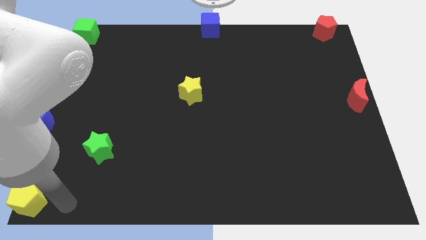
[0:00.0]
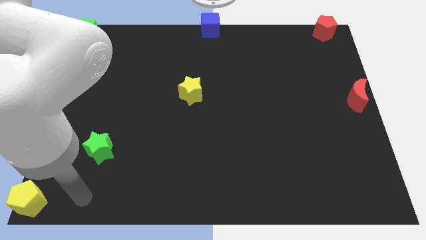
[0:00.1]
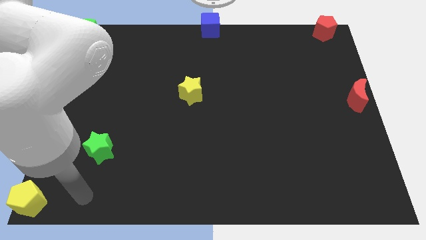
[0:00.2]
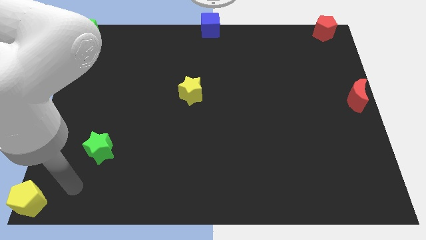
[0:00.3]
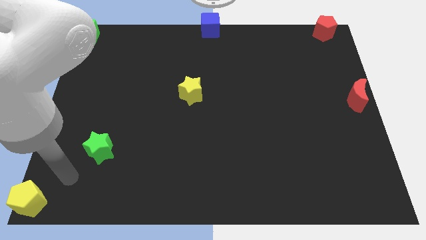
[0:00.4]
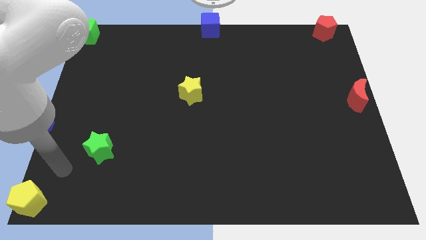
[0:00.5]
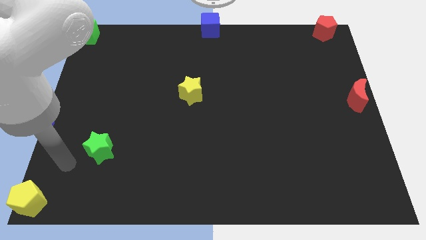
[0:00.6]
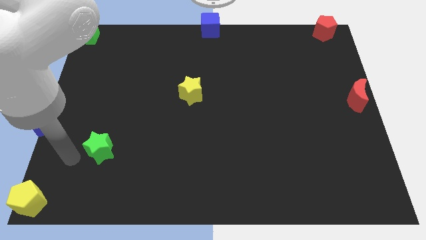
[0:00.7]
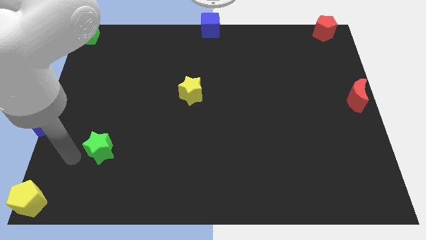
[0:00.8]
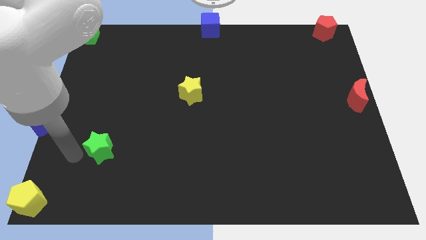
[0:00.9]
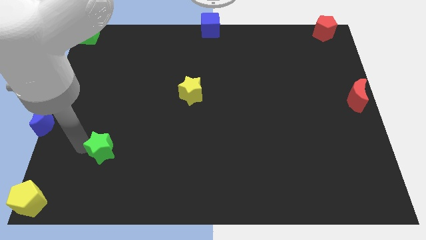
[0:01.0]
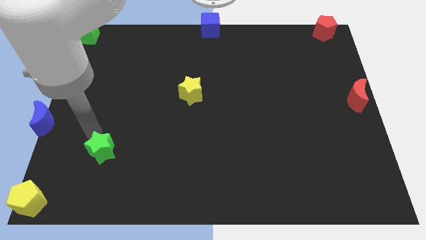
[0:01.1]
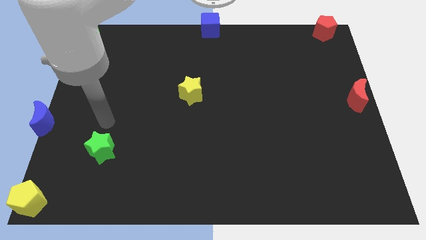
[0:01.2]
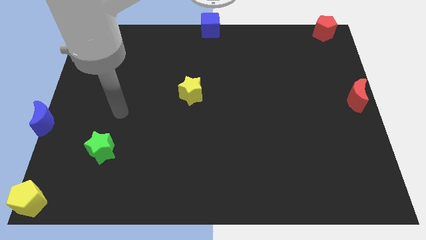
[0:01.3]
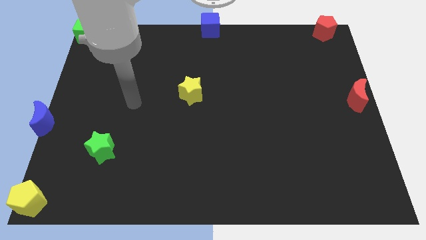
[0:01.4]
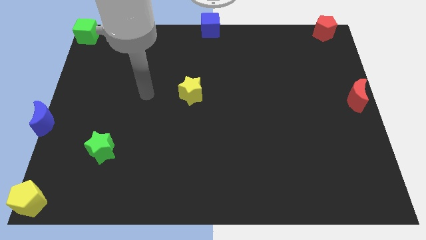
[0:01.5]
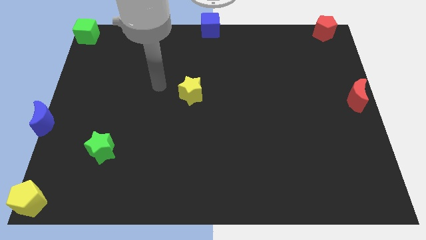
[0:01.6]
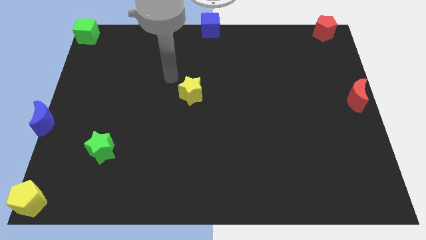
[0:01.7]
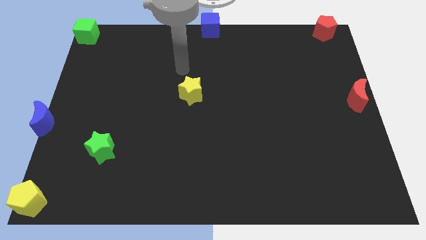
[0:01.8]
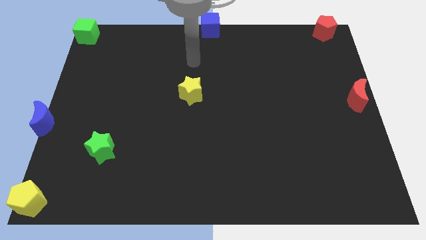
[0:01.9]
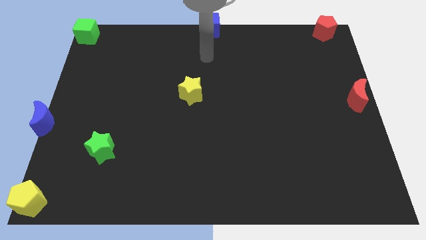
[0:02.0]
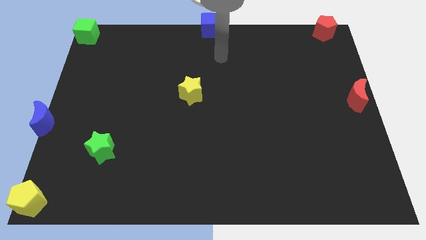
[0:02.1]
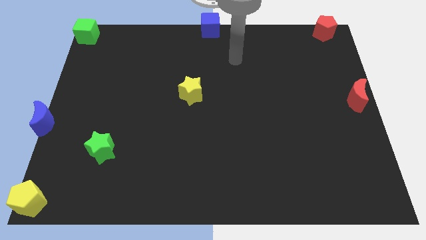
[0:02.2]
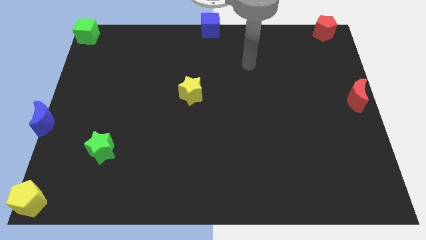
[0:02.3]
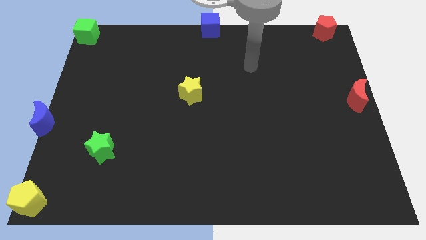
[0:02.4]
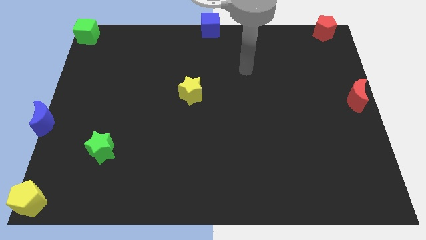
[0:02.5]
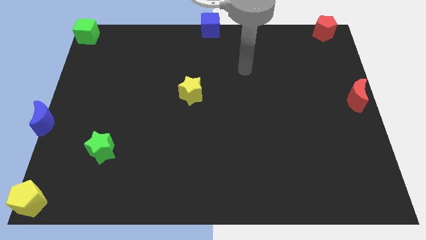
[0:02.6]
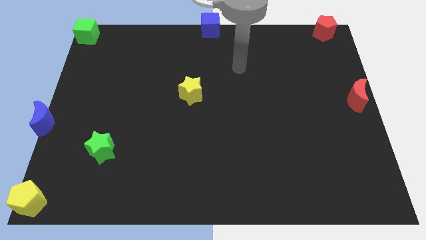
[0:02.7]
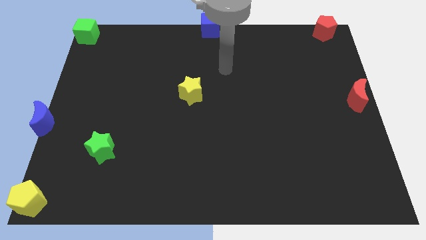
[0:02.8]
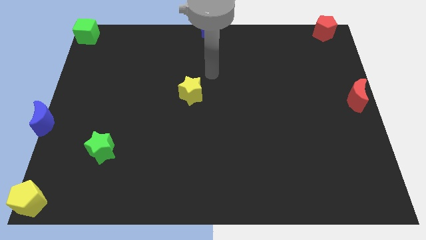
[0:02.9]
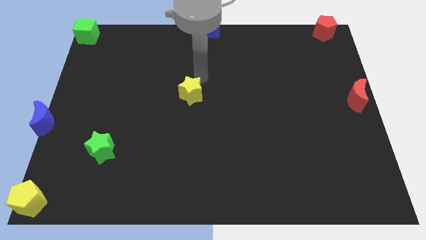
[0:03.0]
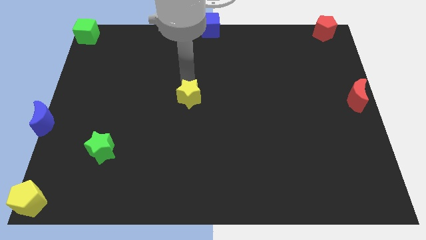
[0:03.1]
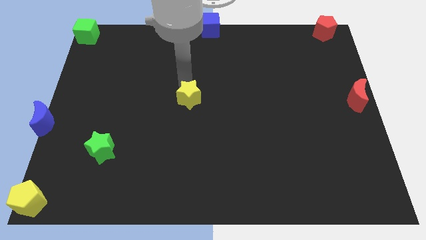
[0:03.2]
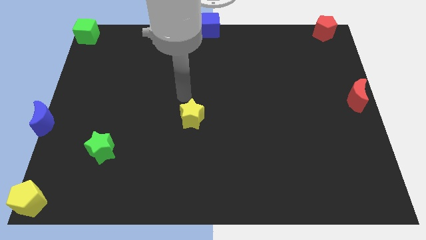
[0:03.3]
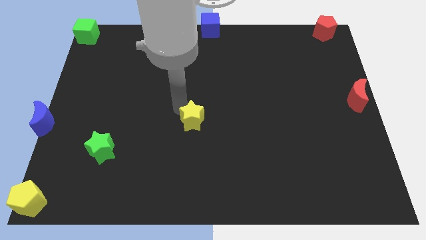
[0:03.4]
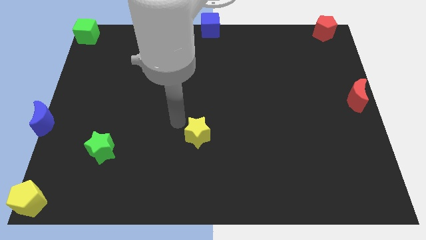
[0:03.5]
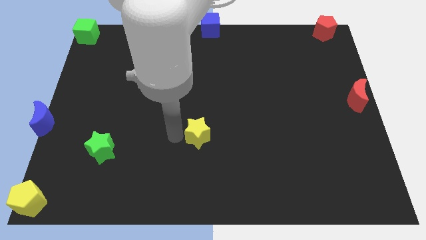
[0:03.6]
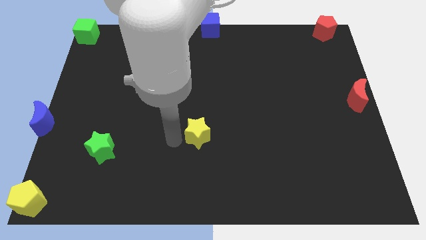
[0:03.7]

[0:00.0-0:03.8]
move the yellow star towards the bottom of the board

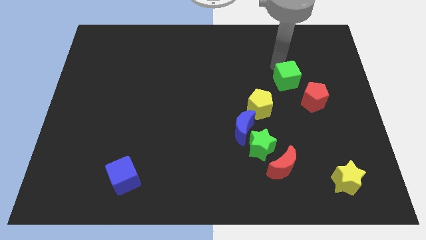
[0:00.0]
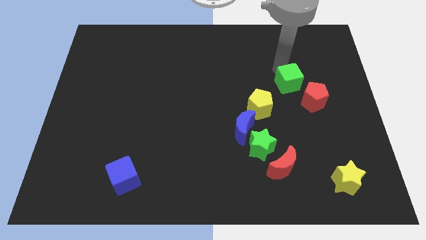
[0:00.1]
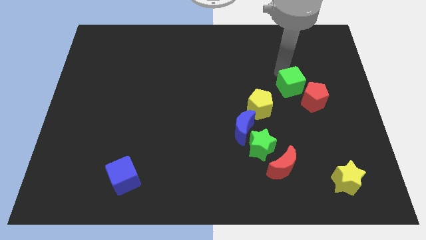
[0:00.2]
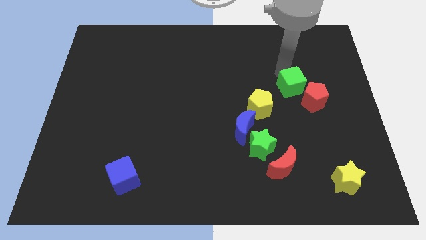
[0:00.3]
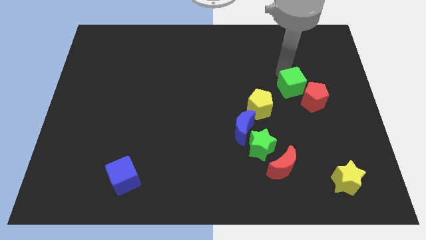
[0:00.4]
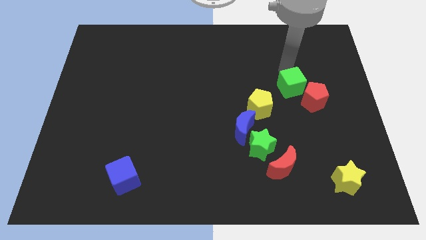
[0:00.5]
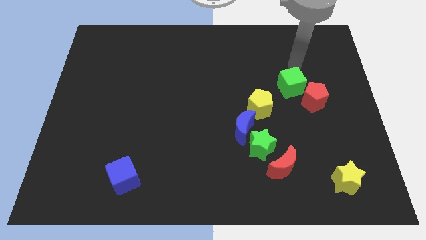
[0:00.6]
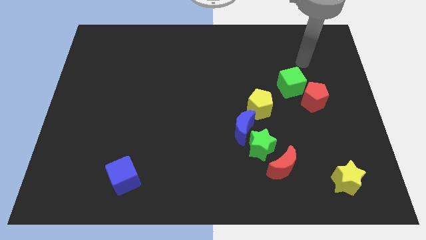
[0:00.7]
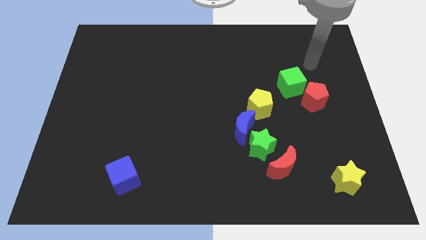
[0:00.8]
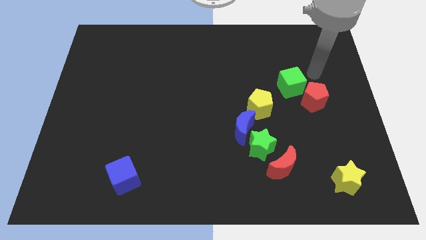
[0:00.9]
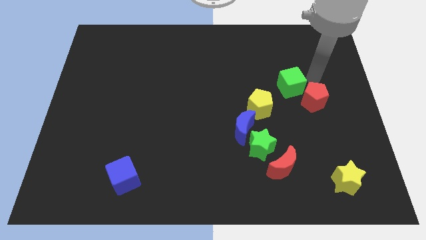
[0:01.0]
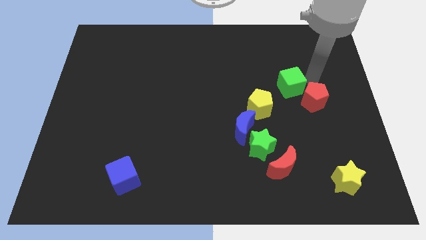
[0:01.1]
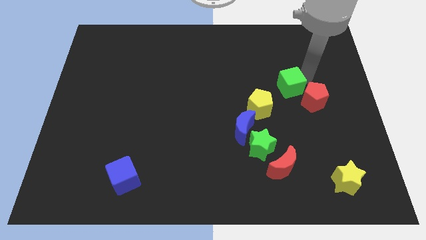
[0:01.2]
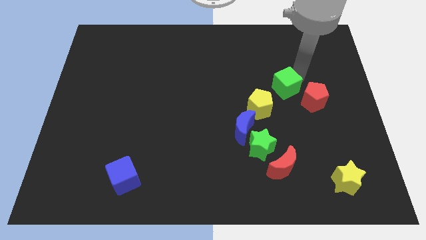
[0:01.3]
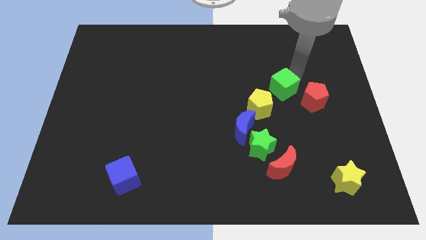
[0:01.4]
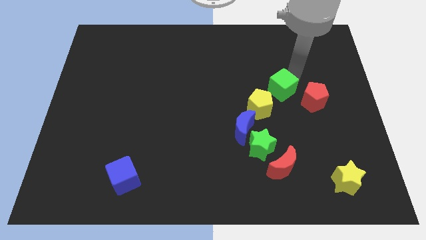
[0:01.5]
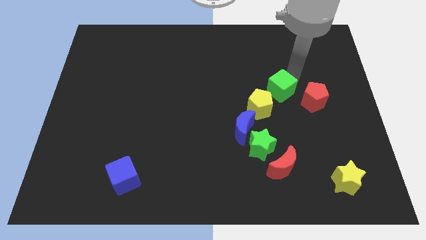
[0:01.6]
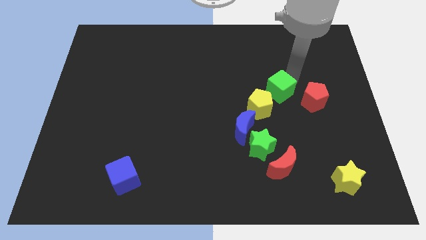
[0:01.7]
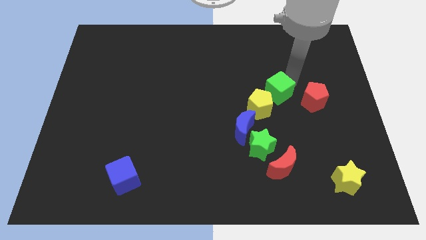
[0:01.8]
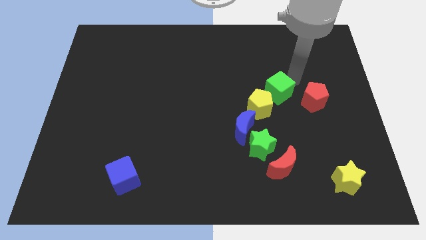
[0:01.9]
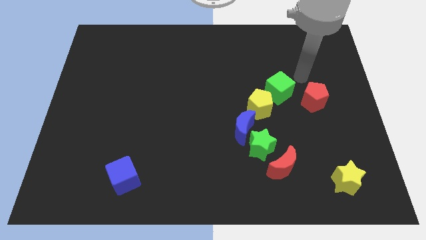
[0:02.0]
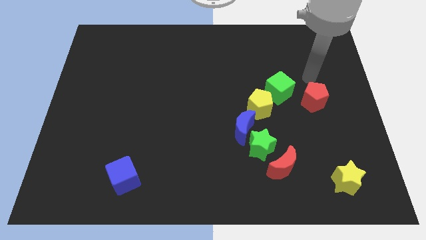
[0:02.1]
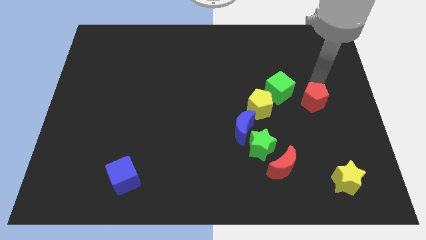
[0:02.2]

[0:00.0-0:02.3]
push the green cube diagonal above yellow pentagon

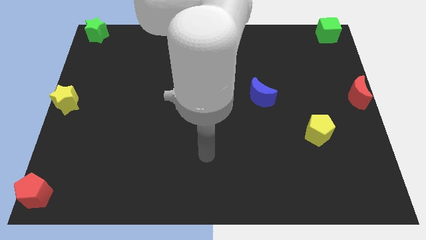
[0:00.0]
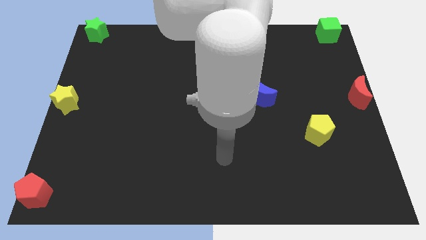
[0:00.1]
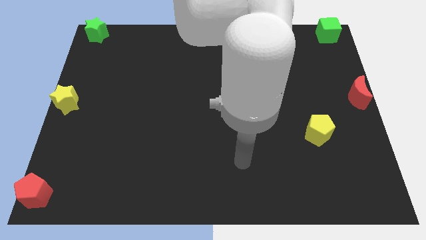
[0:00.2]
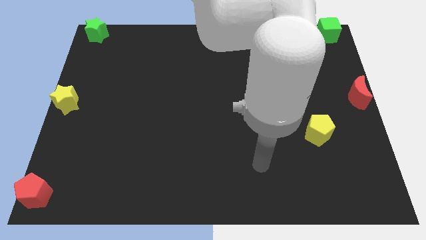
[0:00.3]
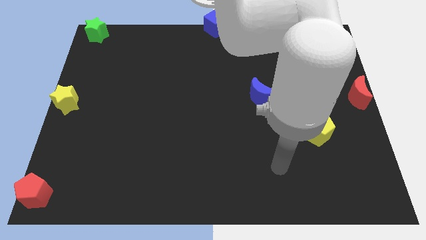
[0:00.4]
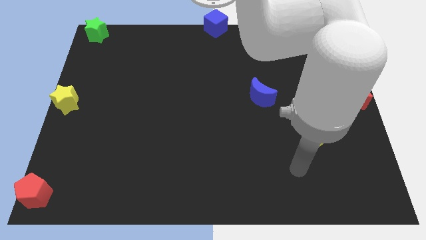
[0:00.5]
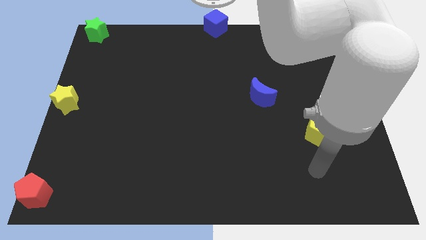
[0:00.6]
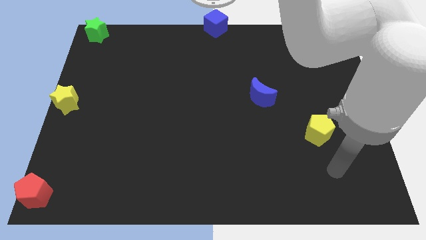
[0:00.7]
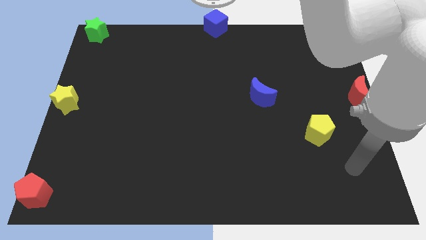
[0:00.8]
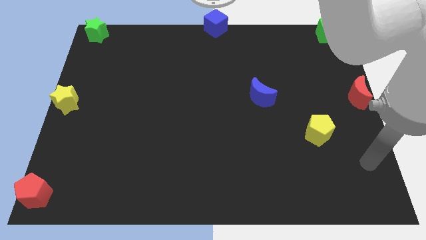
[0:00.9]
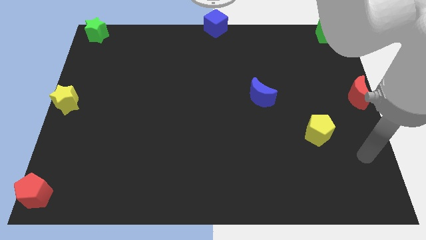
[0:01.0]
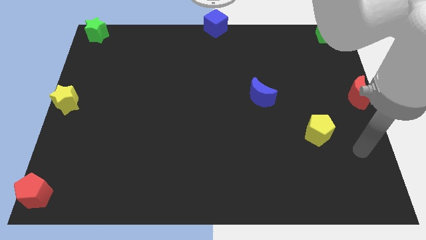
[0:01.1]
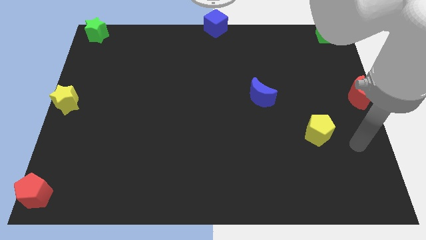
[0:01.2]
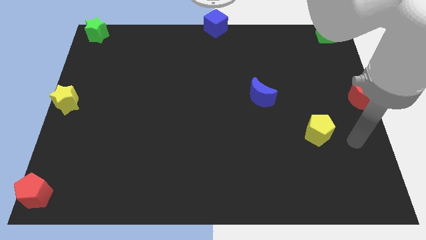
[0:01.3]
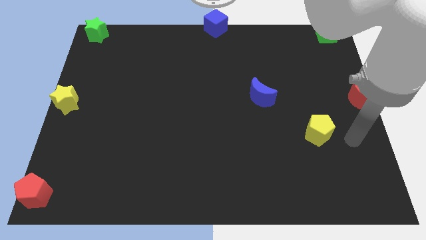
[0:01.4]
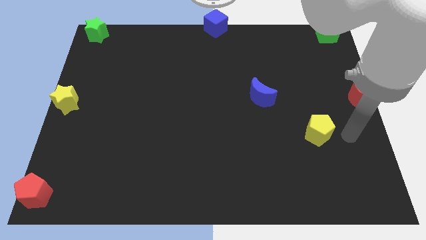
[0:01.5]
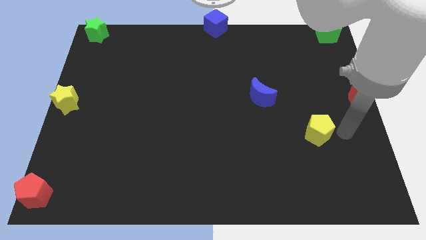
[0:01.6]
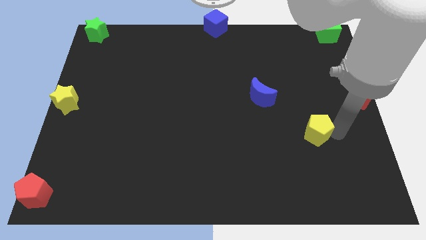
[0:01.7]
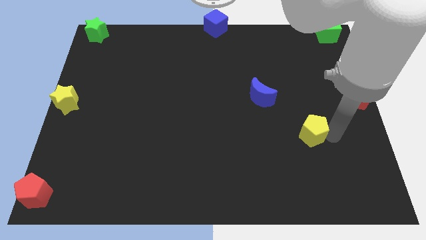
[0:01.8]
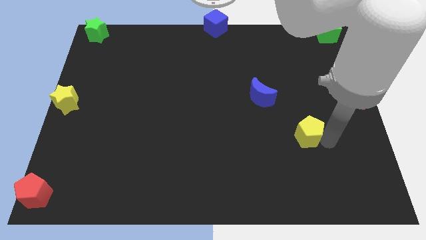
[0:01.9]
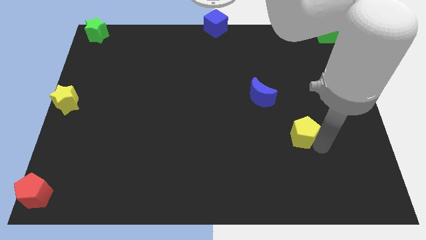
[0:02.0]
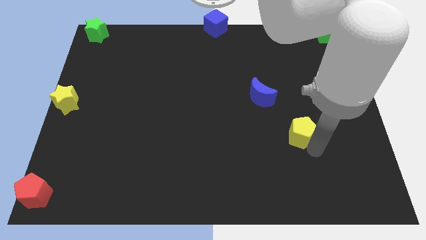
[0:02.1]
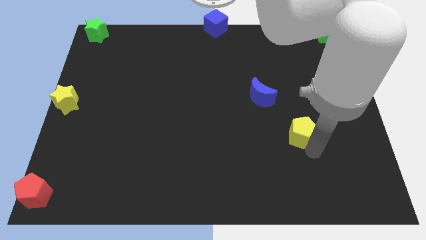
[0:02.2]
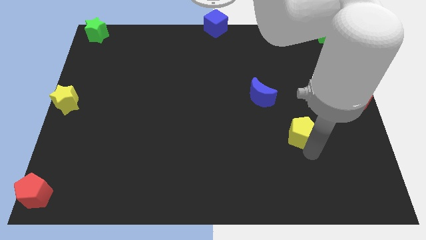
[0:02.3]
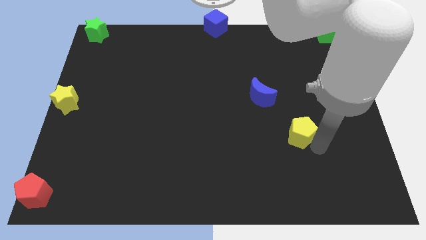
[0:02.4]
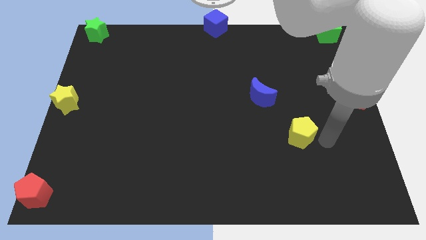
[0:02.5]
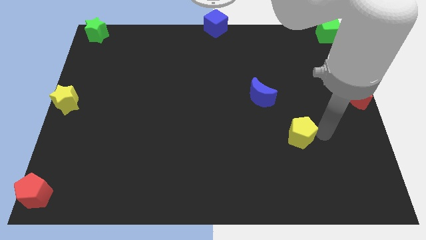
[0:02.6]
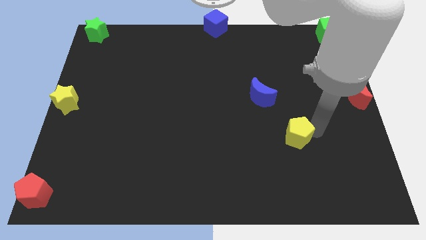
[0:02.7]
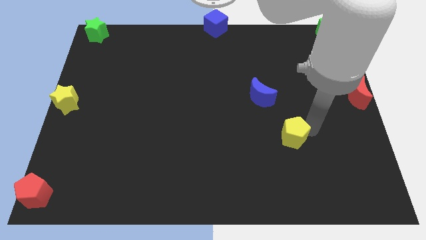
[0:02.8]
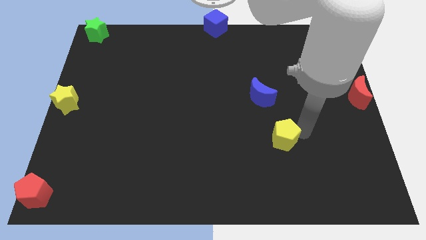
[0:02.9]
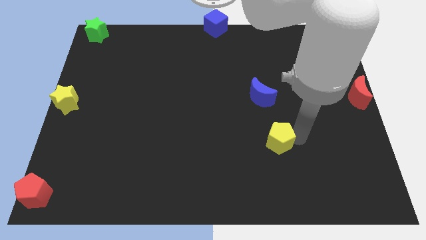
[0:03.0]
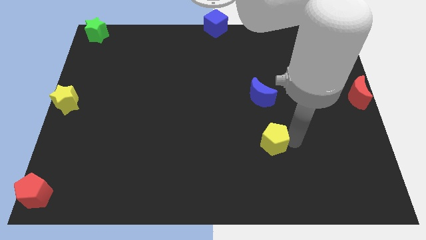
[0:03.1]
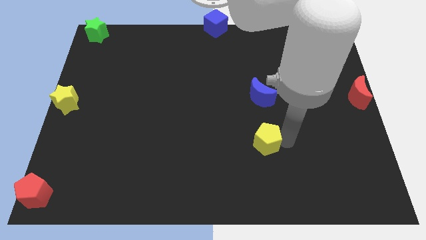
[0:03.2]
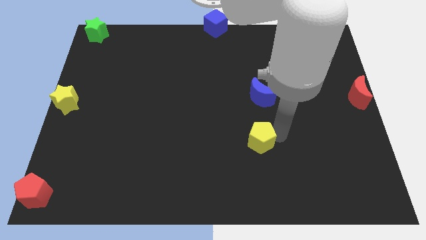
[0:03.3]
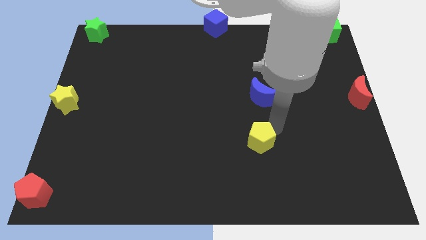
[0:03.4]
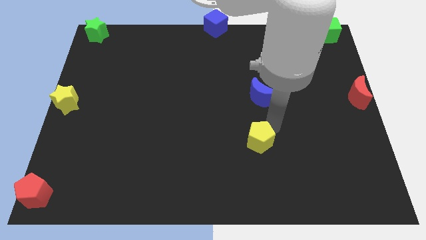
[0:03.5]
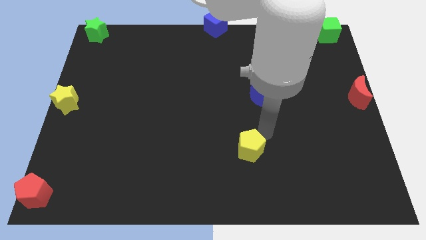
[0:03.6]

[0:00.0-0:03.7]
place the yellow pentagon below the blue moon
